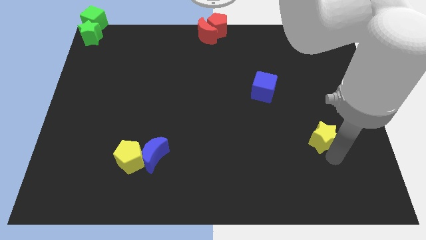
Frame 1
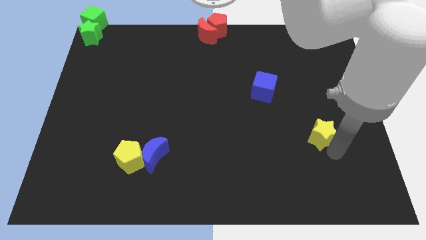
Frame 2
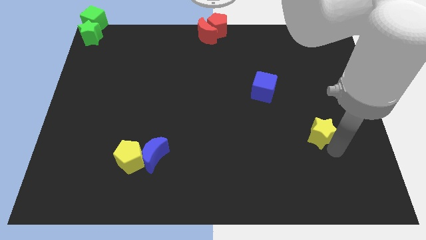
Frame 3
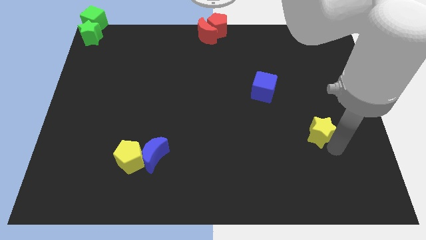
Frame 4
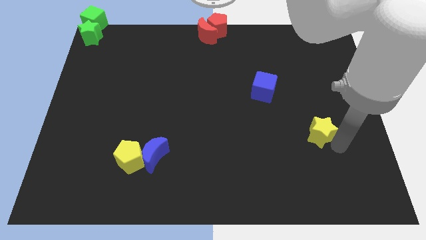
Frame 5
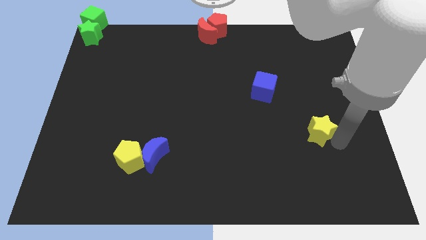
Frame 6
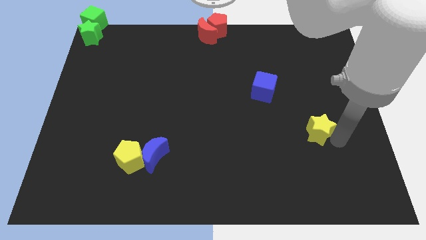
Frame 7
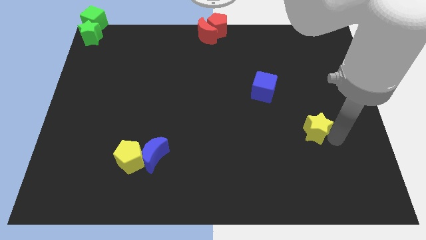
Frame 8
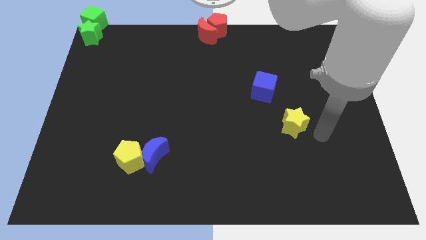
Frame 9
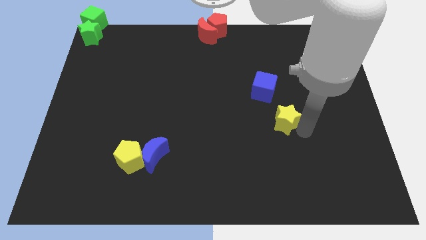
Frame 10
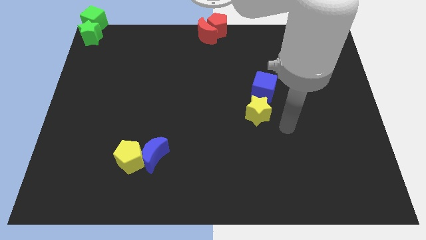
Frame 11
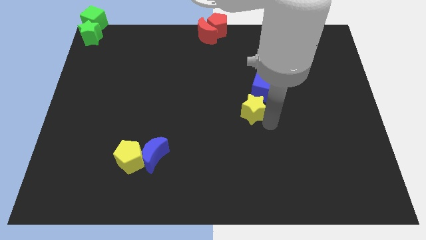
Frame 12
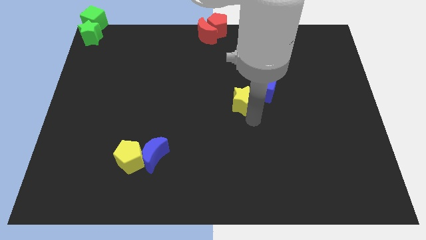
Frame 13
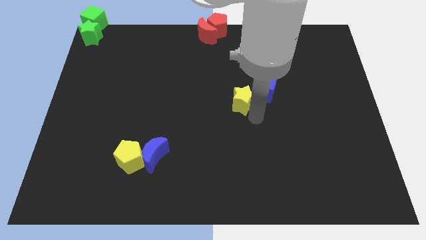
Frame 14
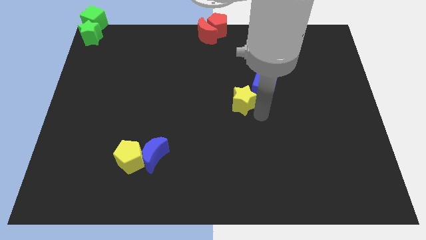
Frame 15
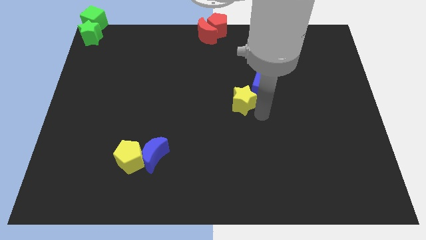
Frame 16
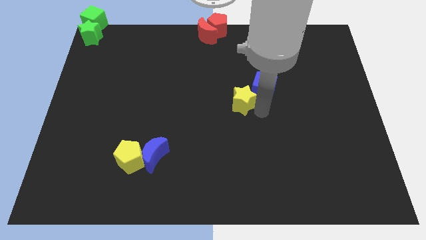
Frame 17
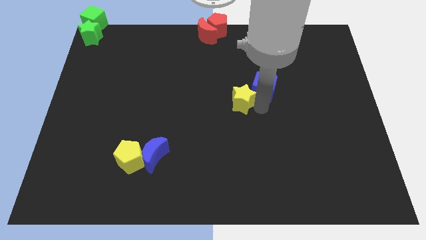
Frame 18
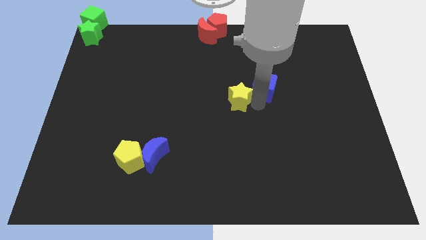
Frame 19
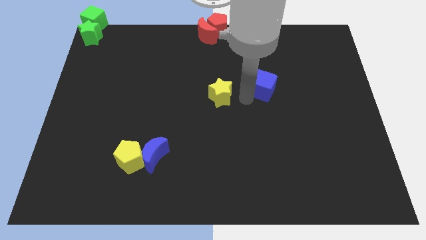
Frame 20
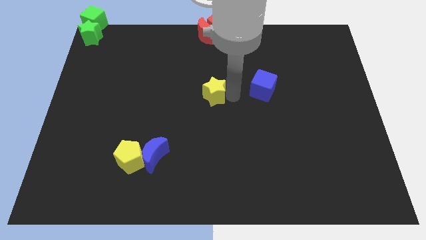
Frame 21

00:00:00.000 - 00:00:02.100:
slide the yellow star to the center of the board

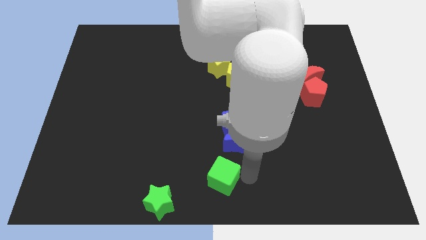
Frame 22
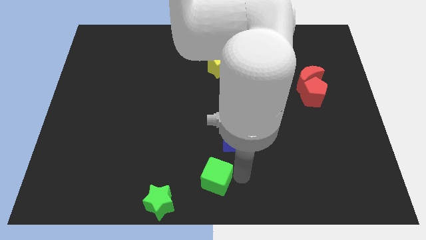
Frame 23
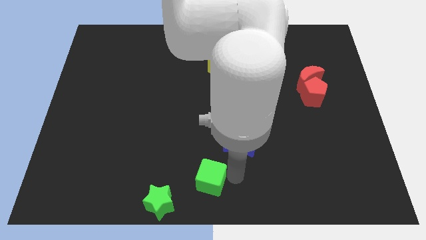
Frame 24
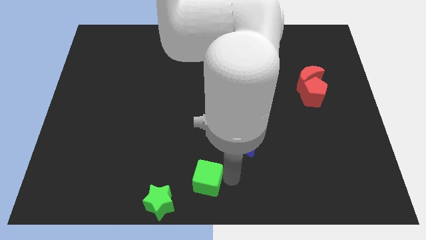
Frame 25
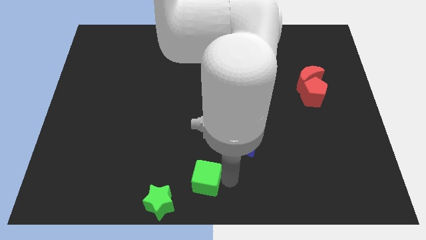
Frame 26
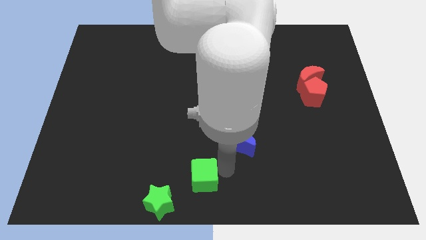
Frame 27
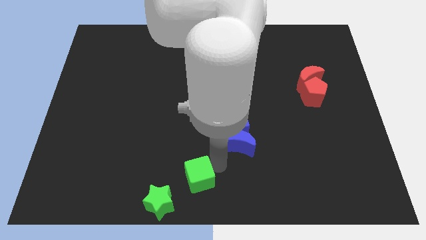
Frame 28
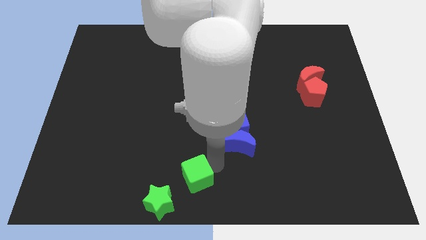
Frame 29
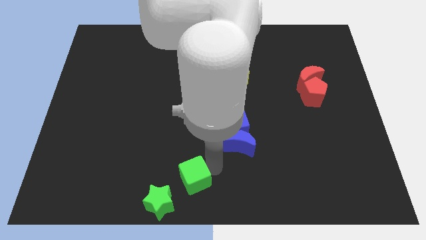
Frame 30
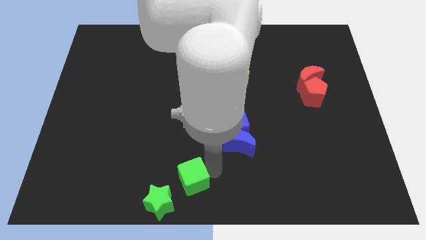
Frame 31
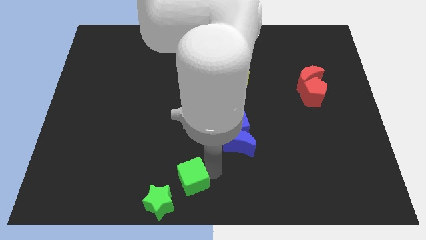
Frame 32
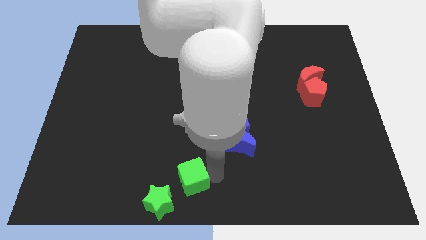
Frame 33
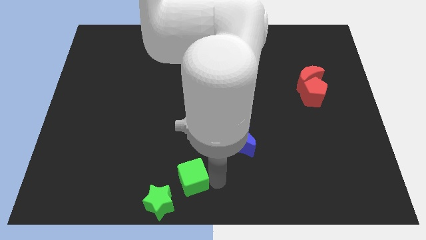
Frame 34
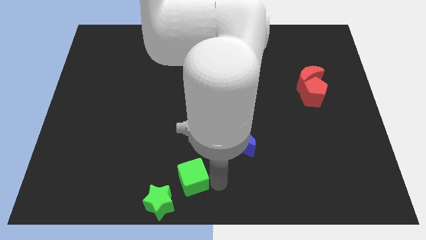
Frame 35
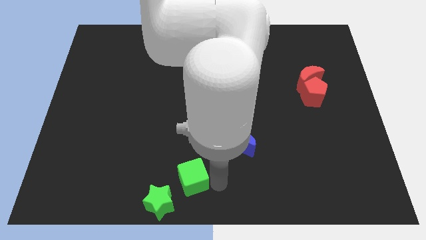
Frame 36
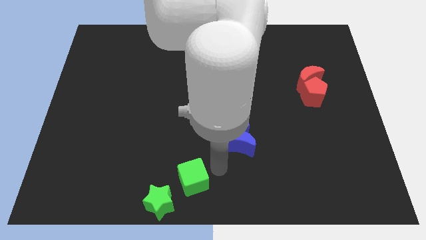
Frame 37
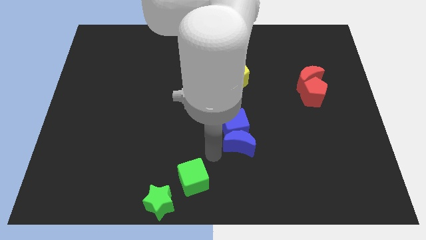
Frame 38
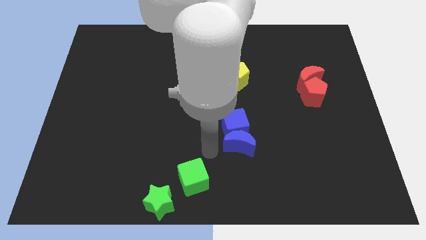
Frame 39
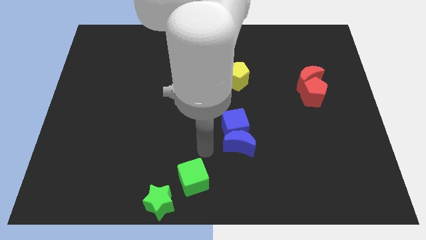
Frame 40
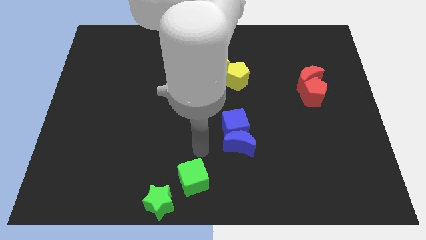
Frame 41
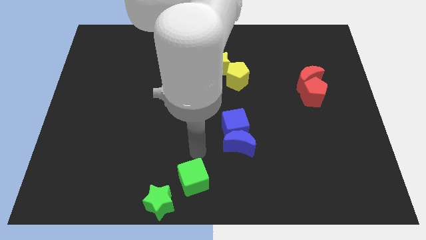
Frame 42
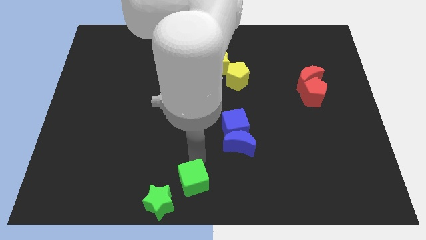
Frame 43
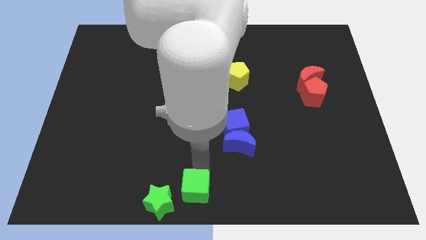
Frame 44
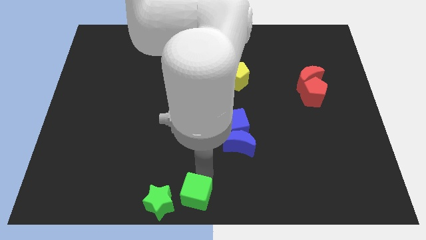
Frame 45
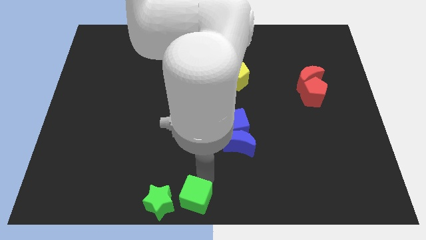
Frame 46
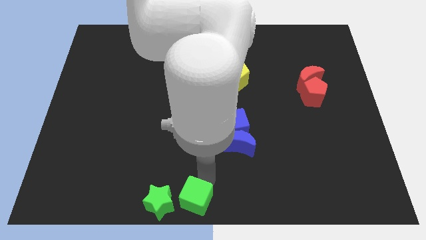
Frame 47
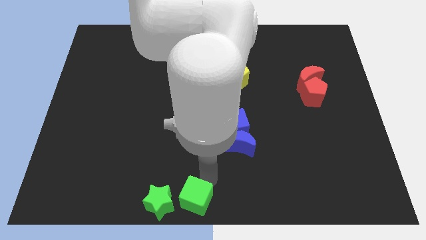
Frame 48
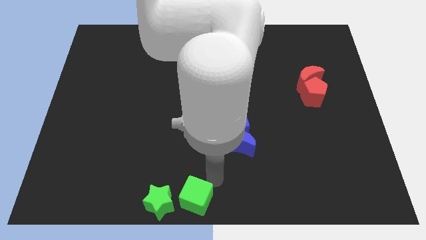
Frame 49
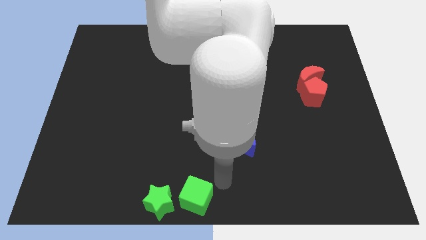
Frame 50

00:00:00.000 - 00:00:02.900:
push the green cube into the green star

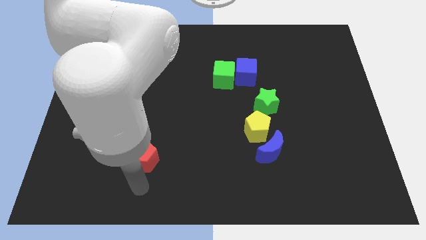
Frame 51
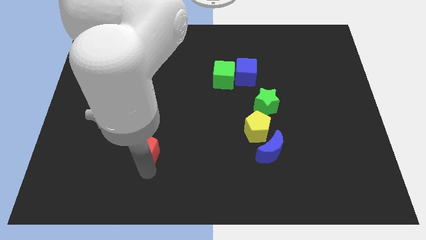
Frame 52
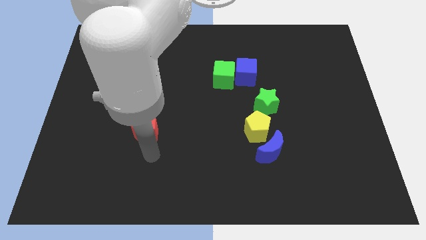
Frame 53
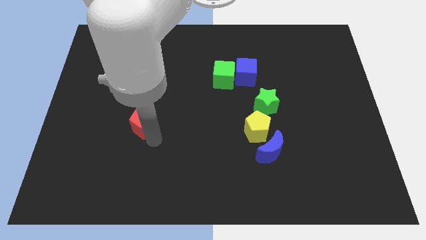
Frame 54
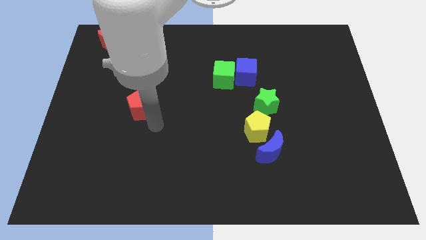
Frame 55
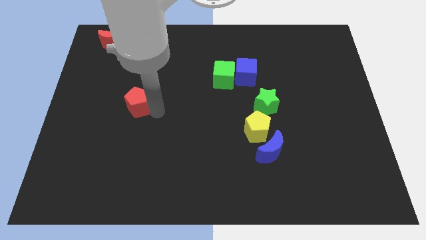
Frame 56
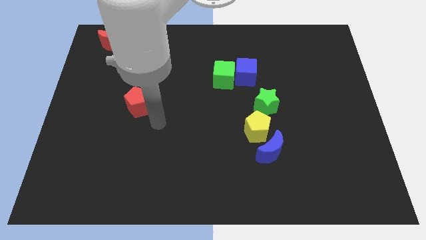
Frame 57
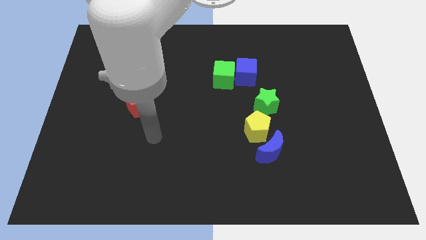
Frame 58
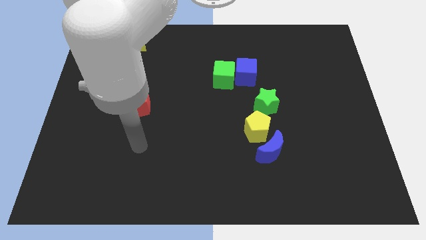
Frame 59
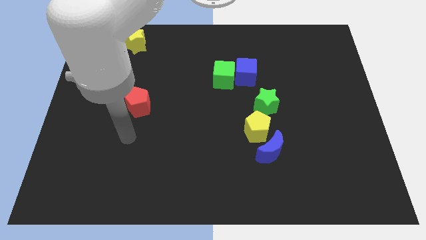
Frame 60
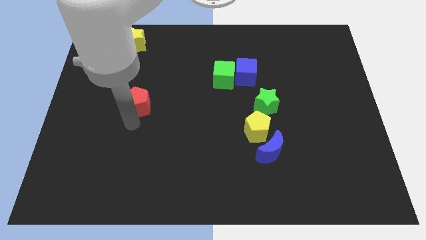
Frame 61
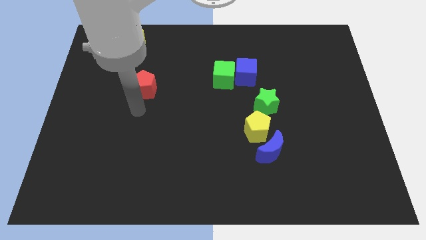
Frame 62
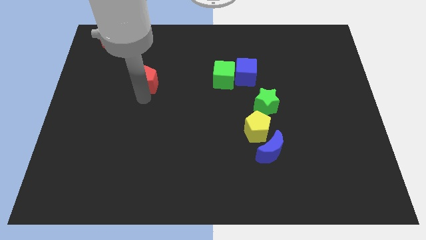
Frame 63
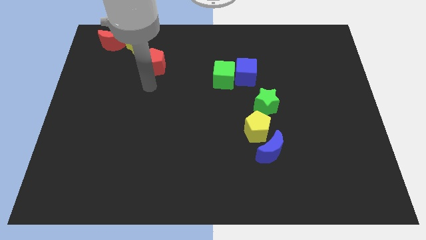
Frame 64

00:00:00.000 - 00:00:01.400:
move the red pentagon parallel to the left of the green cube

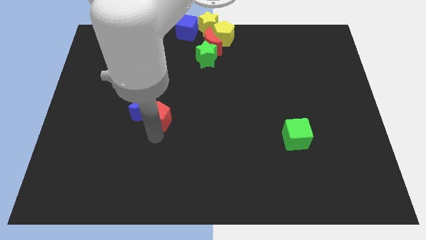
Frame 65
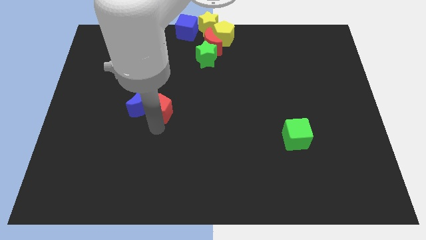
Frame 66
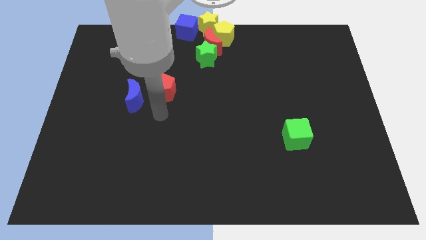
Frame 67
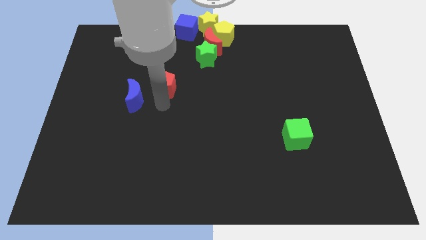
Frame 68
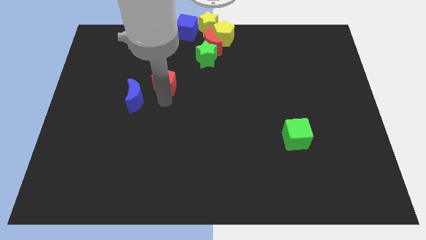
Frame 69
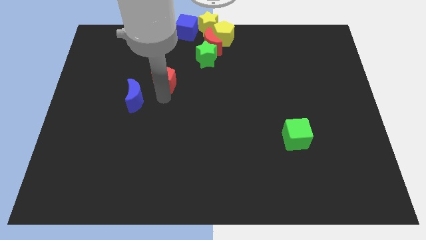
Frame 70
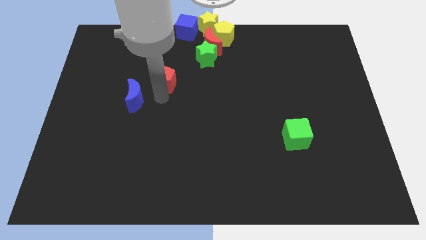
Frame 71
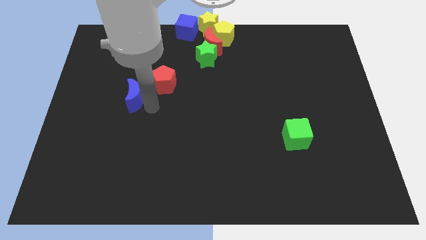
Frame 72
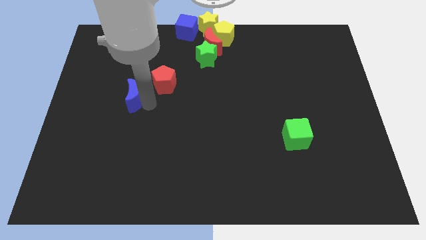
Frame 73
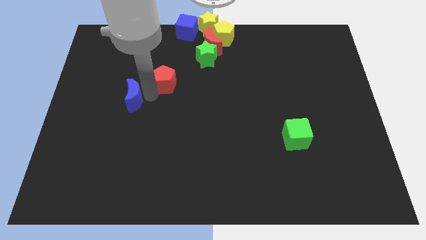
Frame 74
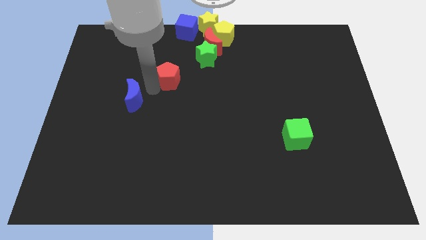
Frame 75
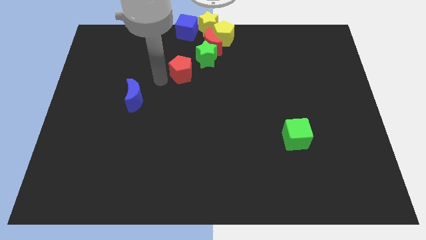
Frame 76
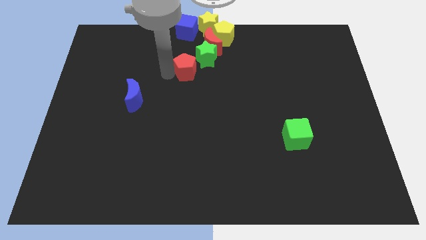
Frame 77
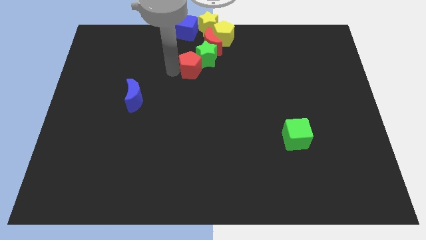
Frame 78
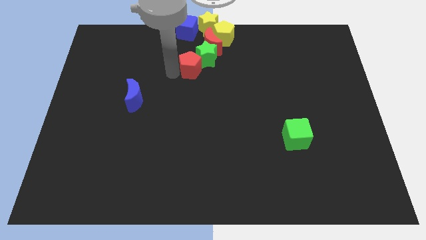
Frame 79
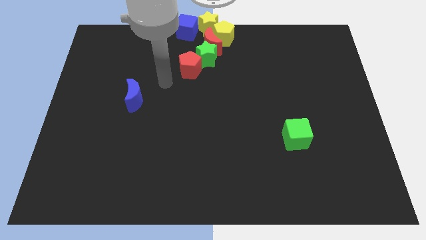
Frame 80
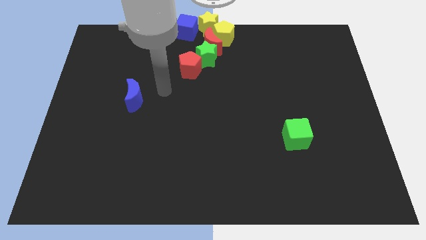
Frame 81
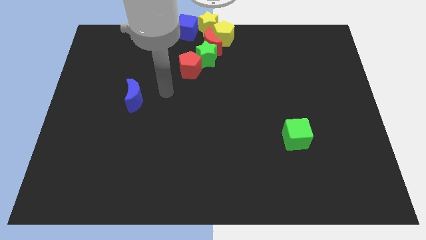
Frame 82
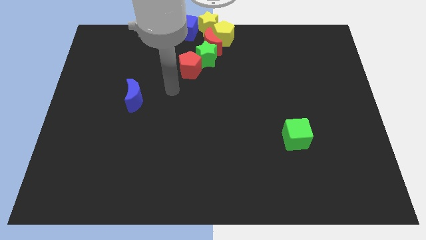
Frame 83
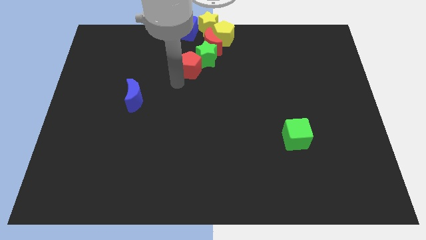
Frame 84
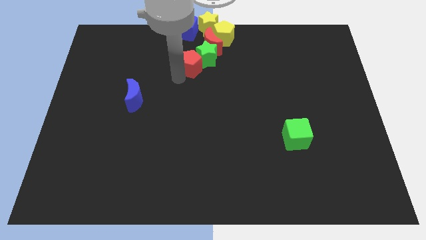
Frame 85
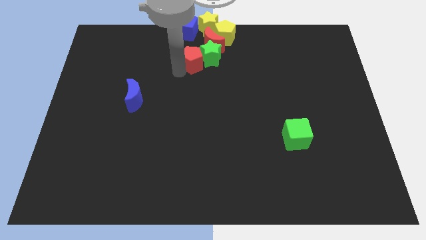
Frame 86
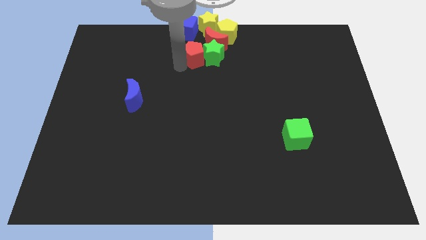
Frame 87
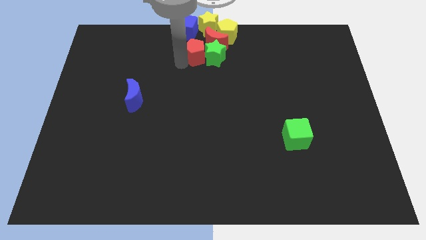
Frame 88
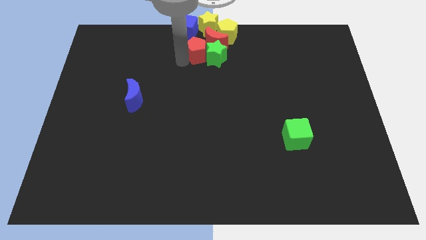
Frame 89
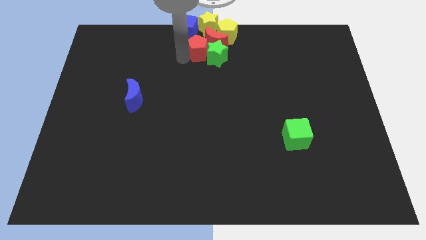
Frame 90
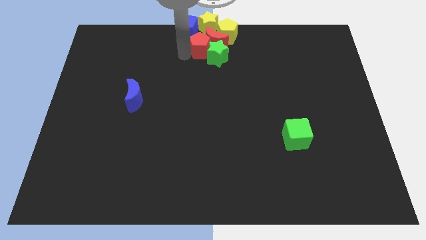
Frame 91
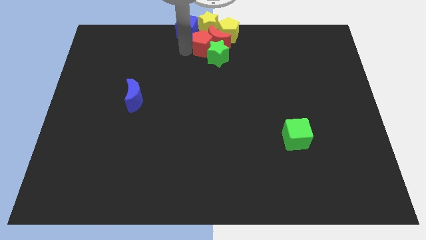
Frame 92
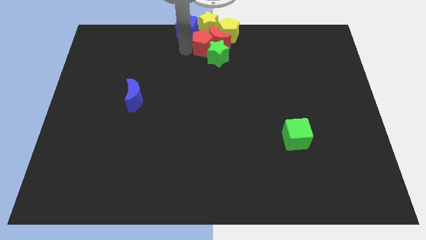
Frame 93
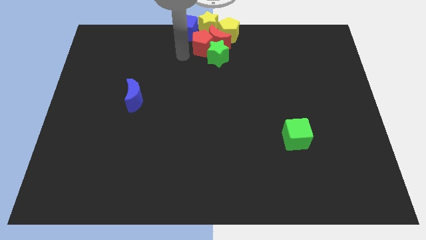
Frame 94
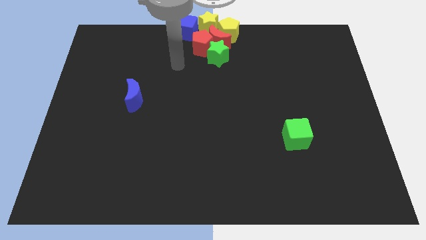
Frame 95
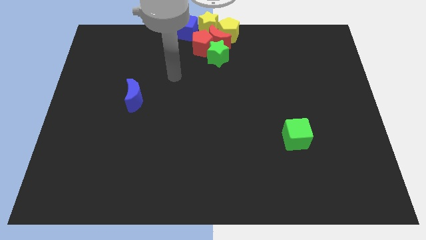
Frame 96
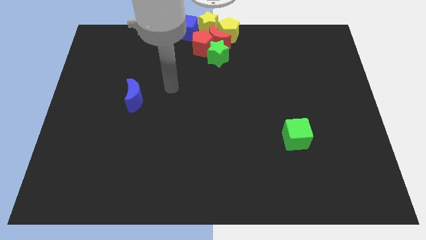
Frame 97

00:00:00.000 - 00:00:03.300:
place red pentagon left of red crescent
